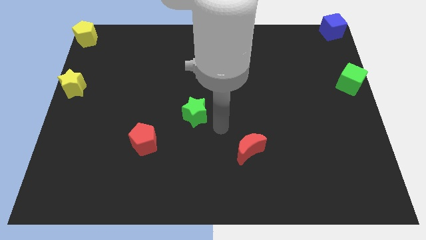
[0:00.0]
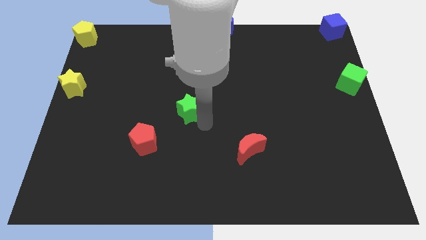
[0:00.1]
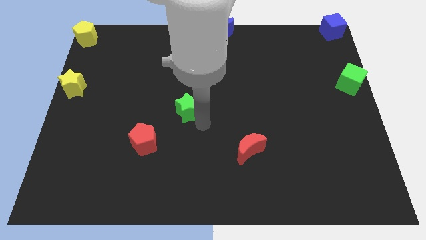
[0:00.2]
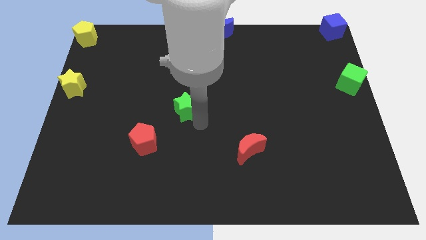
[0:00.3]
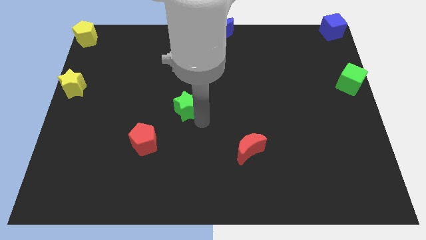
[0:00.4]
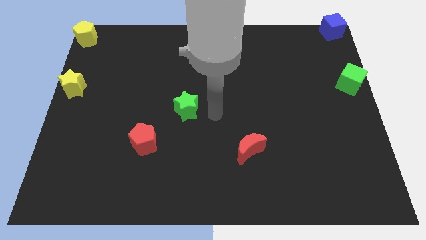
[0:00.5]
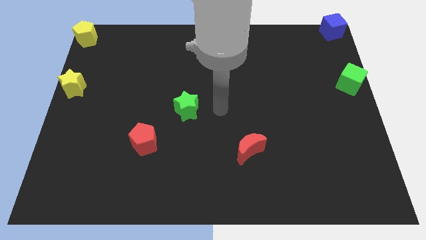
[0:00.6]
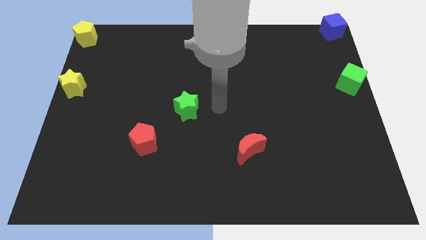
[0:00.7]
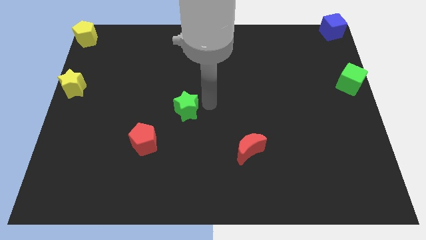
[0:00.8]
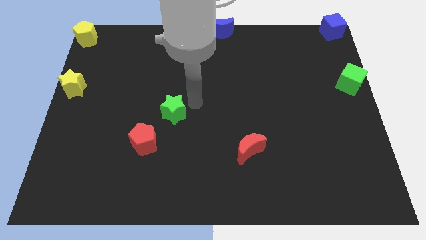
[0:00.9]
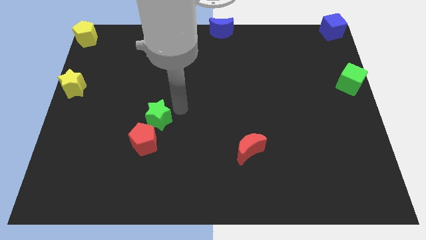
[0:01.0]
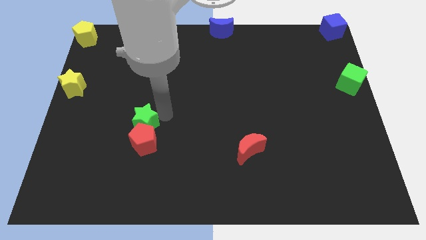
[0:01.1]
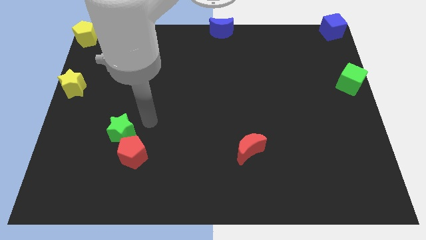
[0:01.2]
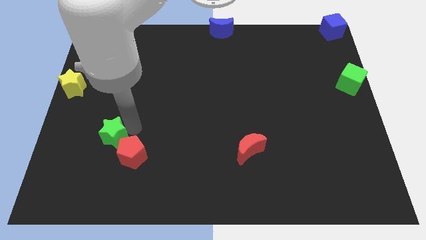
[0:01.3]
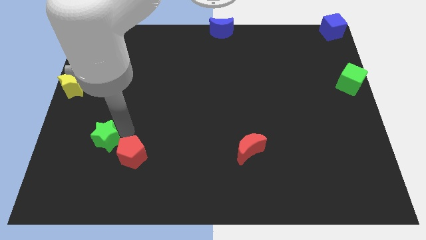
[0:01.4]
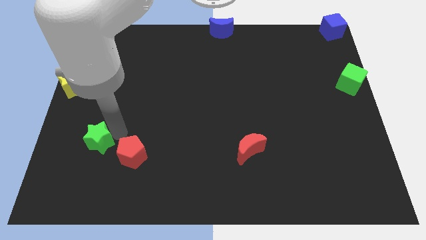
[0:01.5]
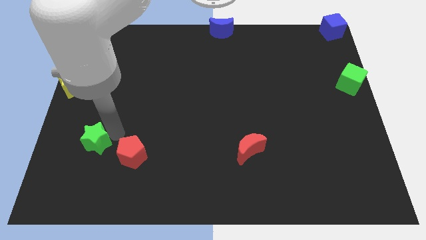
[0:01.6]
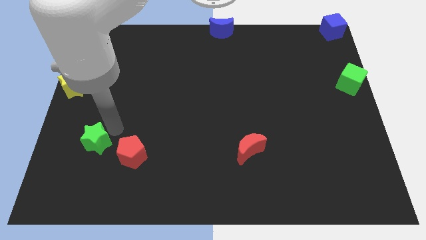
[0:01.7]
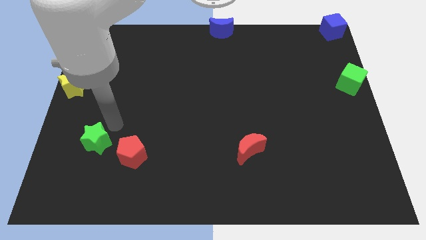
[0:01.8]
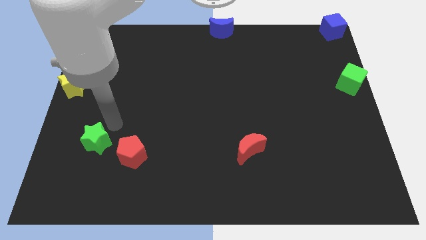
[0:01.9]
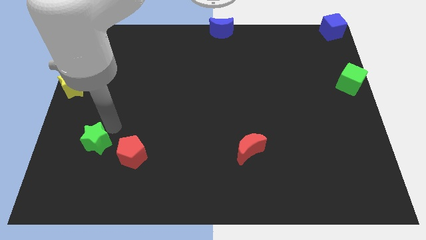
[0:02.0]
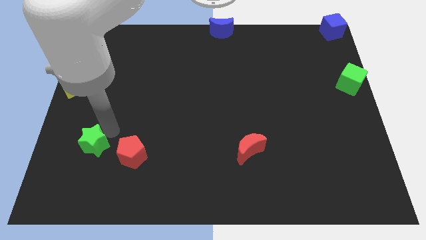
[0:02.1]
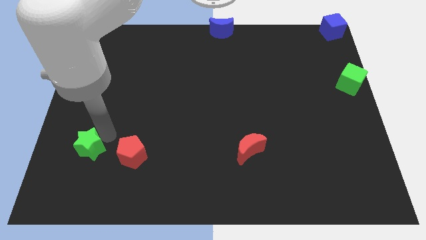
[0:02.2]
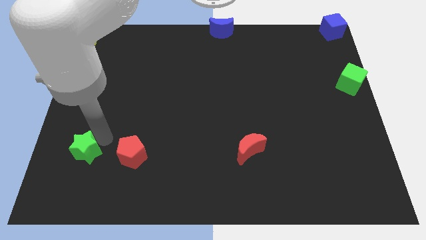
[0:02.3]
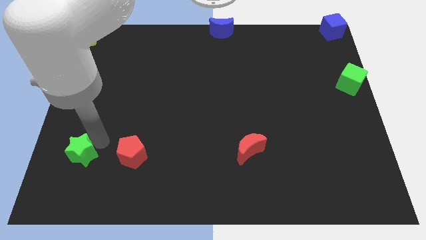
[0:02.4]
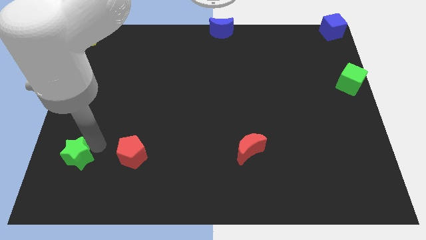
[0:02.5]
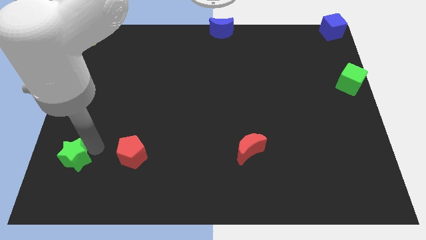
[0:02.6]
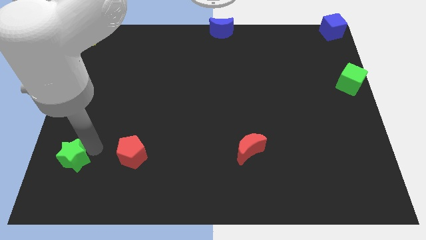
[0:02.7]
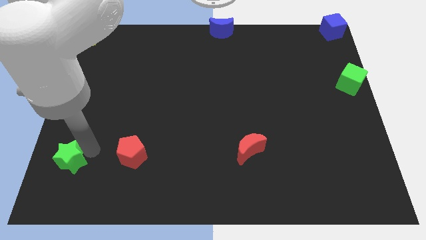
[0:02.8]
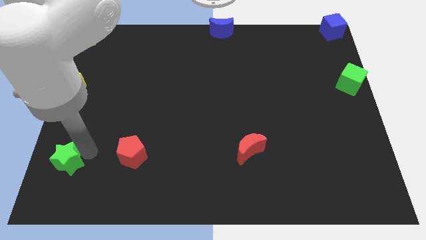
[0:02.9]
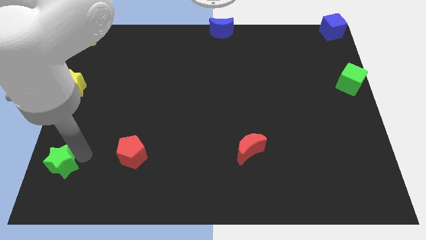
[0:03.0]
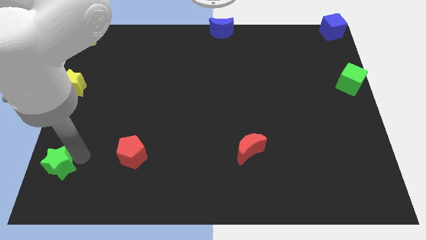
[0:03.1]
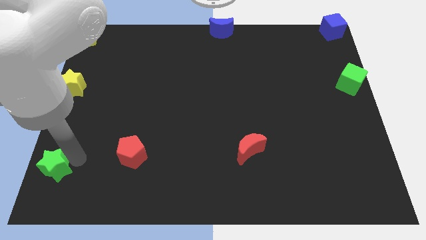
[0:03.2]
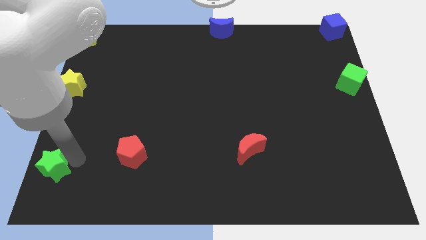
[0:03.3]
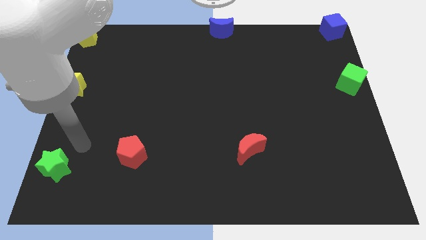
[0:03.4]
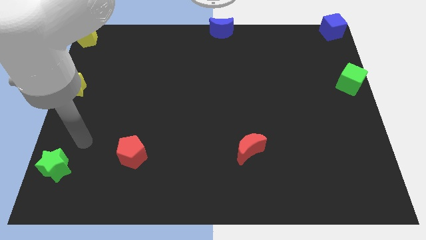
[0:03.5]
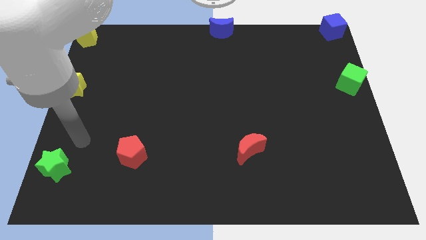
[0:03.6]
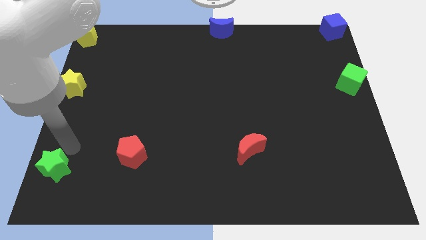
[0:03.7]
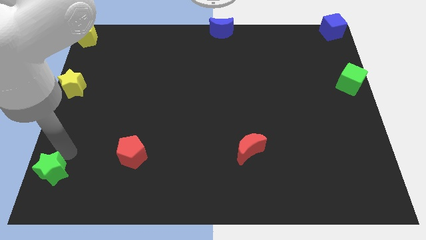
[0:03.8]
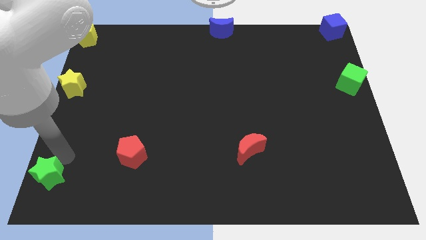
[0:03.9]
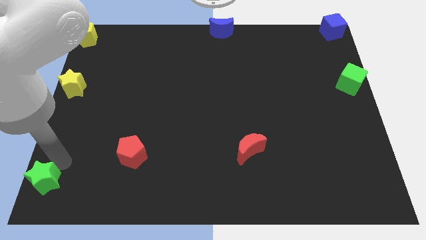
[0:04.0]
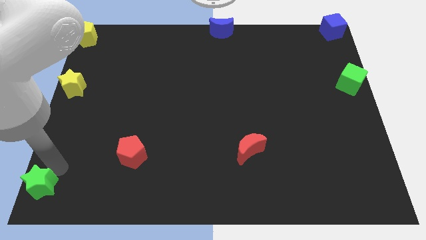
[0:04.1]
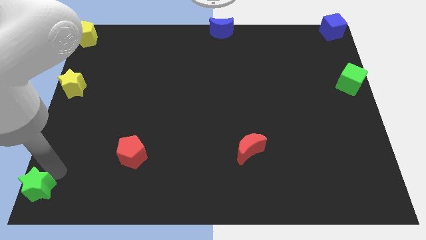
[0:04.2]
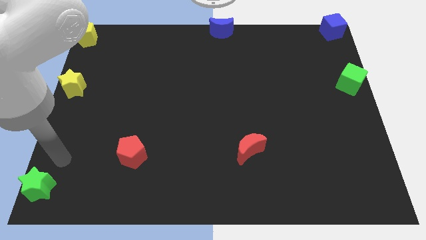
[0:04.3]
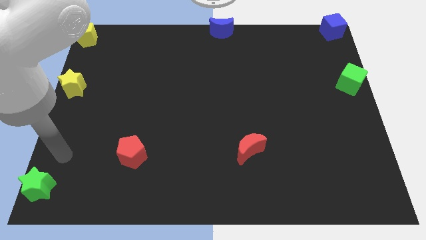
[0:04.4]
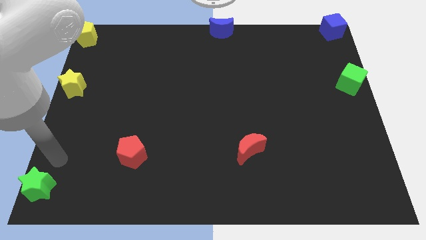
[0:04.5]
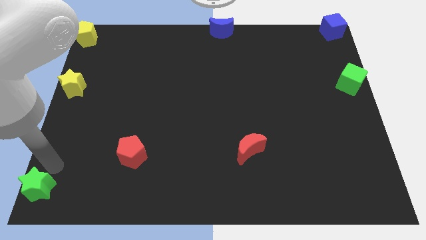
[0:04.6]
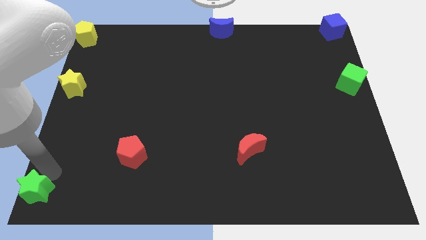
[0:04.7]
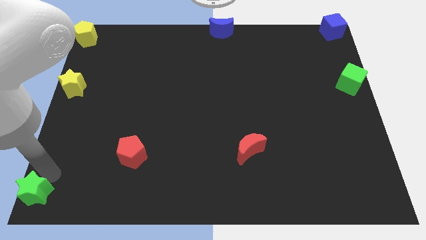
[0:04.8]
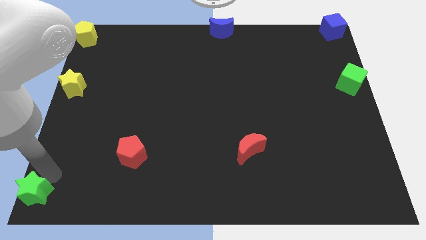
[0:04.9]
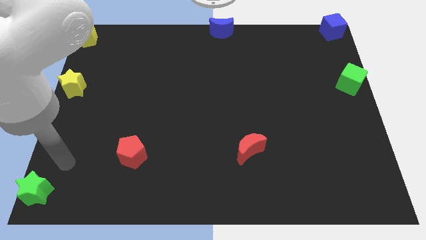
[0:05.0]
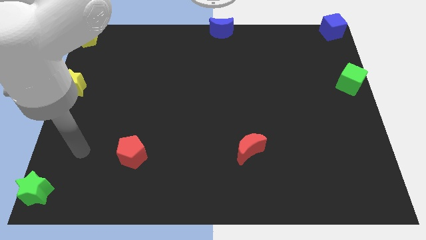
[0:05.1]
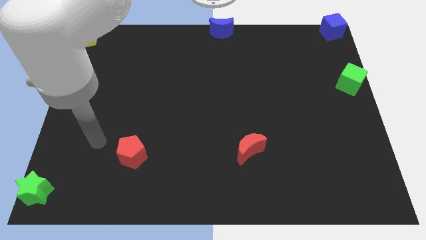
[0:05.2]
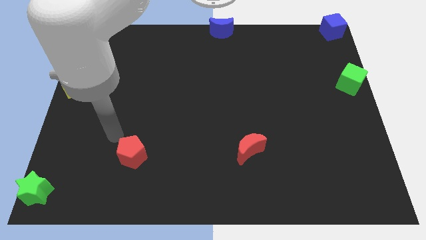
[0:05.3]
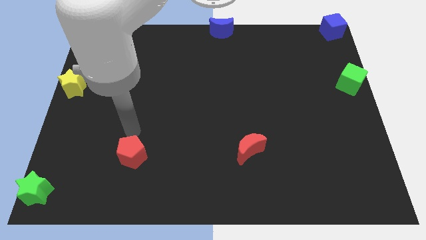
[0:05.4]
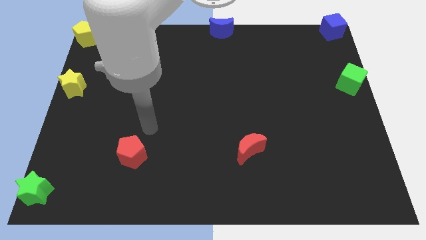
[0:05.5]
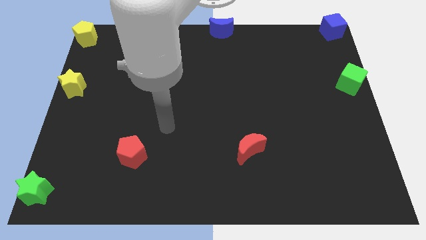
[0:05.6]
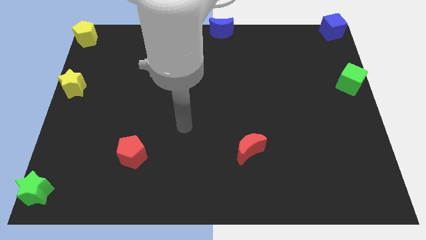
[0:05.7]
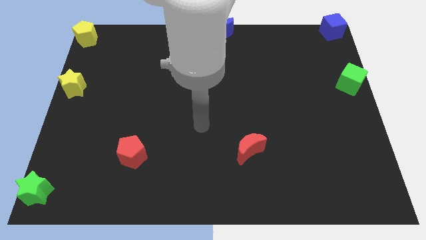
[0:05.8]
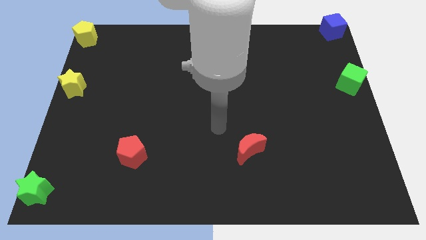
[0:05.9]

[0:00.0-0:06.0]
move the green star to the bottom left

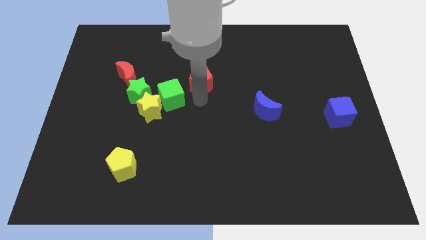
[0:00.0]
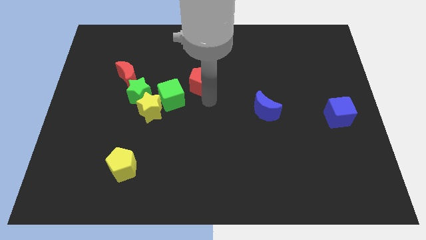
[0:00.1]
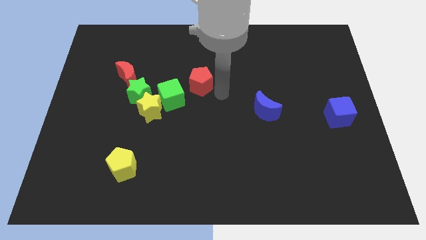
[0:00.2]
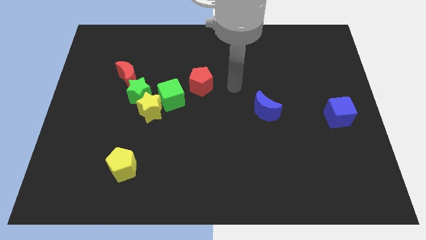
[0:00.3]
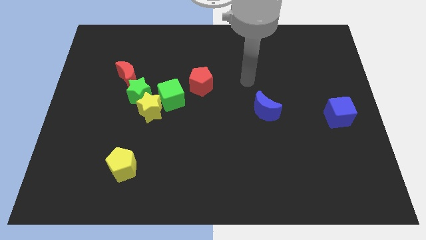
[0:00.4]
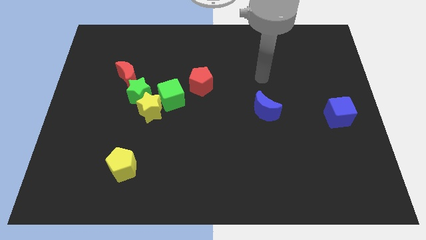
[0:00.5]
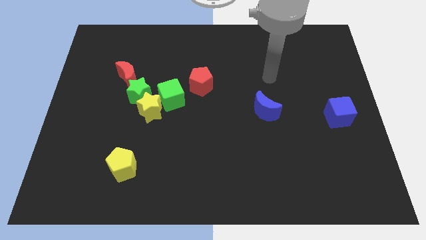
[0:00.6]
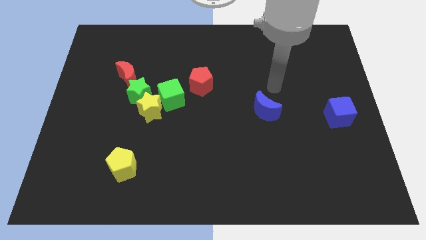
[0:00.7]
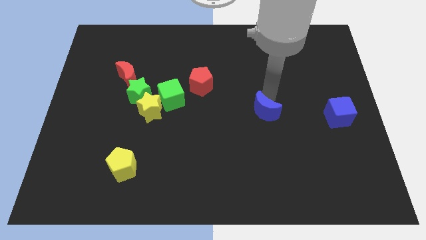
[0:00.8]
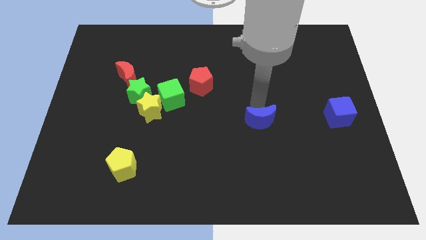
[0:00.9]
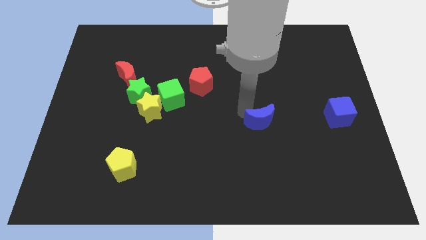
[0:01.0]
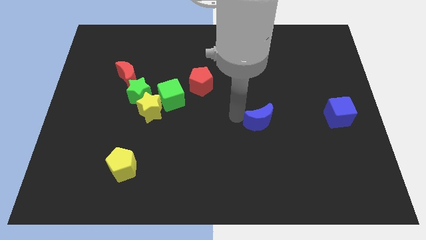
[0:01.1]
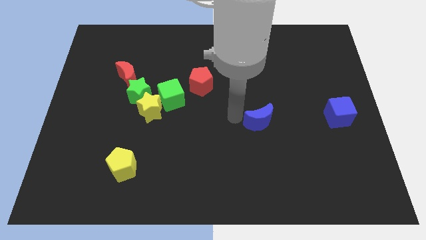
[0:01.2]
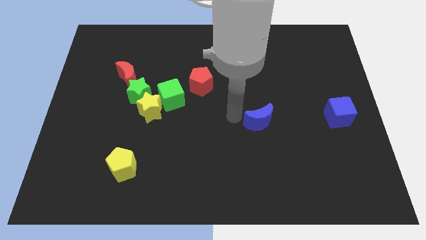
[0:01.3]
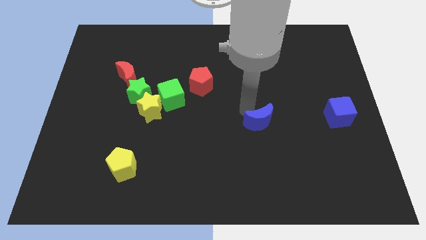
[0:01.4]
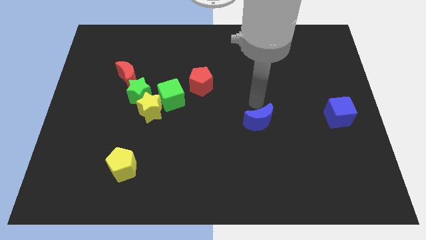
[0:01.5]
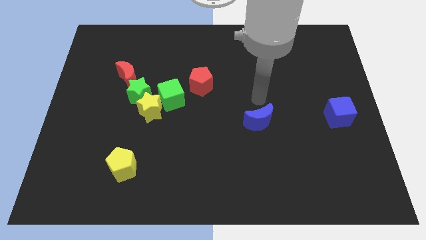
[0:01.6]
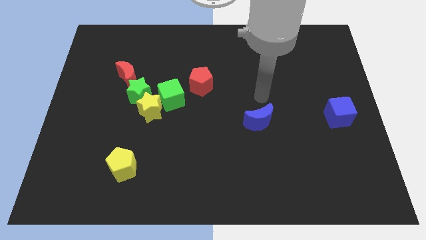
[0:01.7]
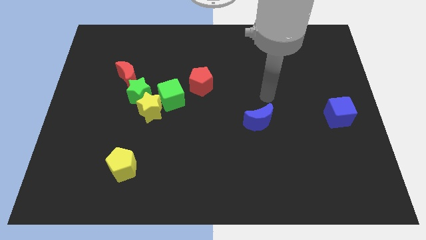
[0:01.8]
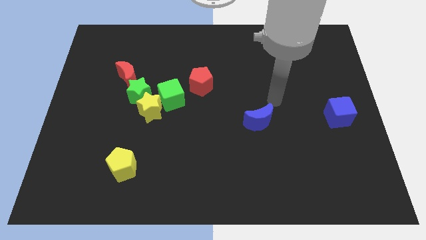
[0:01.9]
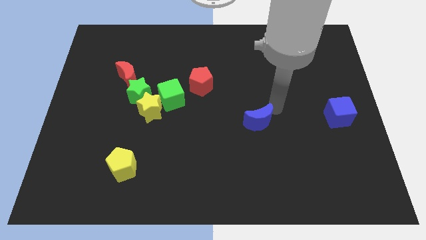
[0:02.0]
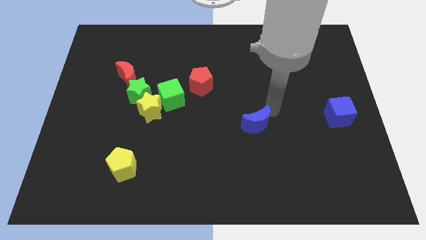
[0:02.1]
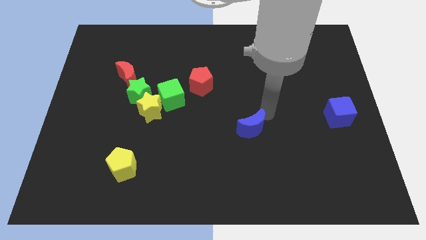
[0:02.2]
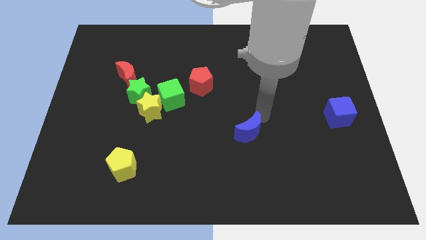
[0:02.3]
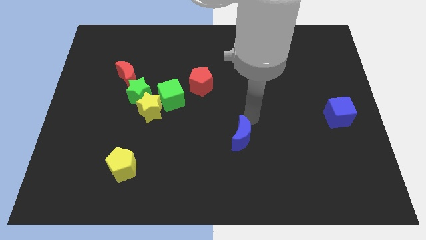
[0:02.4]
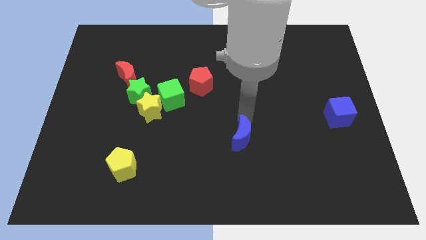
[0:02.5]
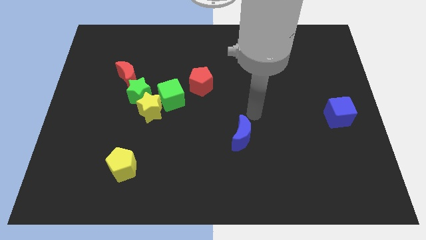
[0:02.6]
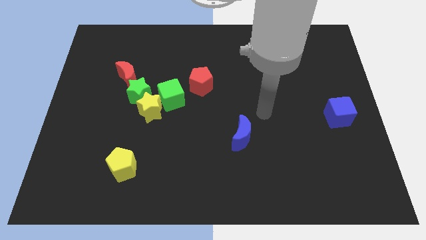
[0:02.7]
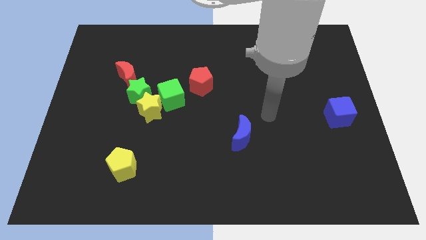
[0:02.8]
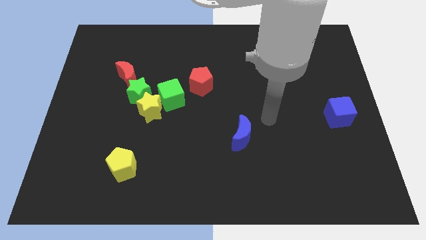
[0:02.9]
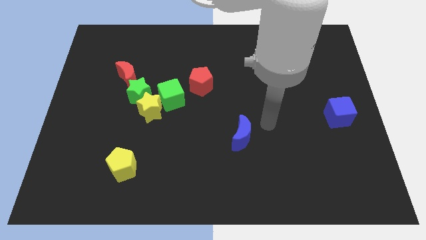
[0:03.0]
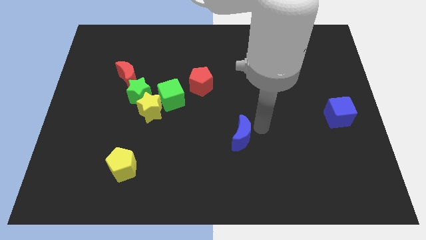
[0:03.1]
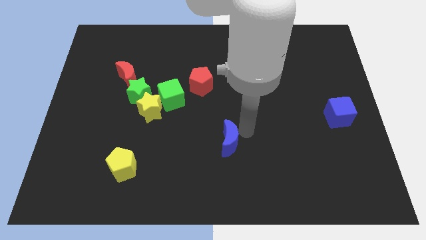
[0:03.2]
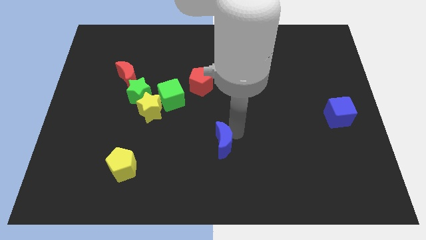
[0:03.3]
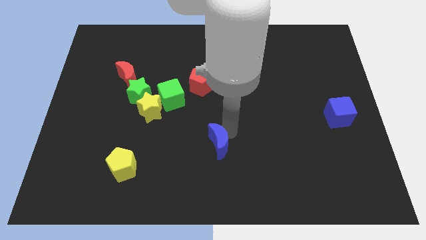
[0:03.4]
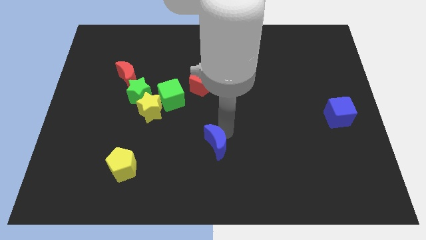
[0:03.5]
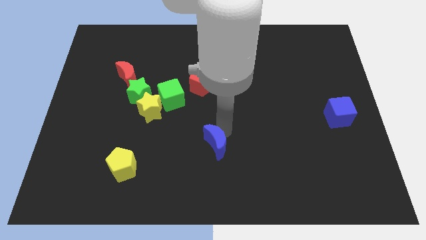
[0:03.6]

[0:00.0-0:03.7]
push the blue crescent towards the yellow pentagon
